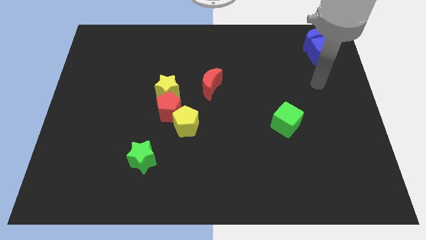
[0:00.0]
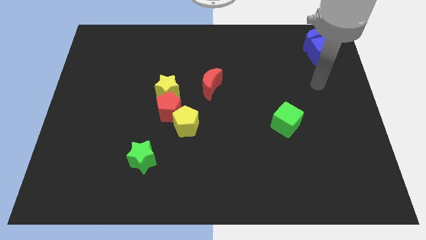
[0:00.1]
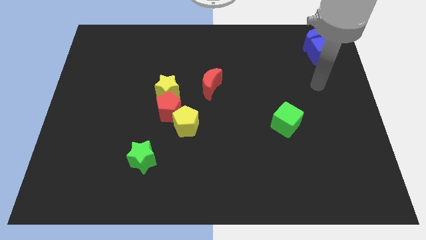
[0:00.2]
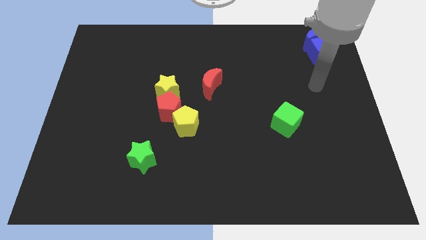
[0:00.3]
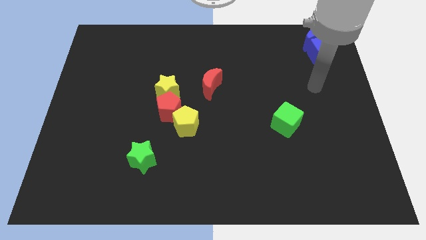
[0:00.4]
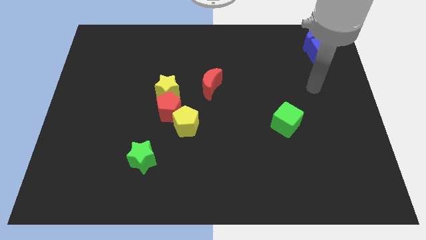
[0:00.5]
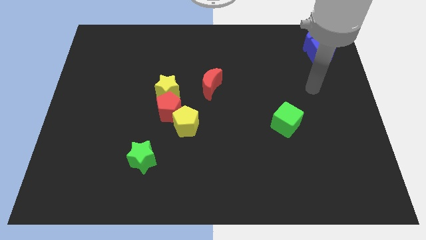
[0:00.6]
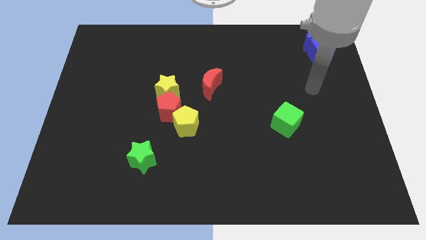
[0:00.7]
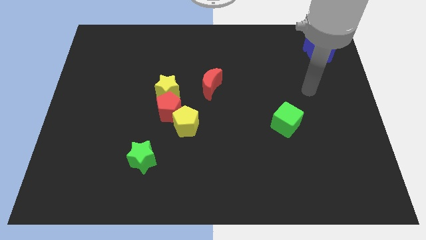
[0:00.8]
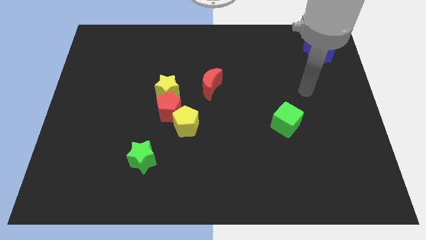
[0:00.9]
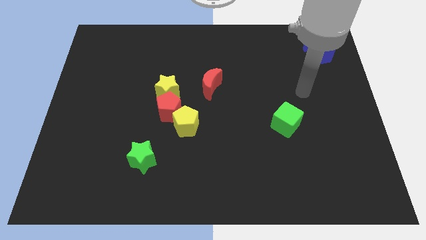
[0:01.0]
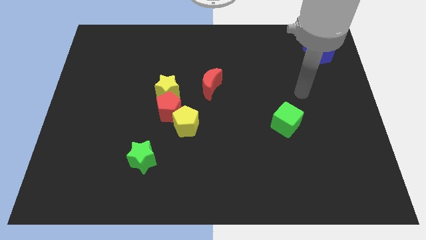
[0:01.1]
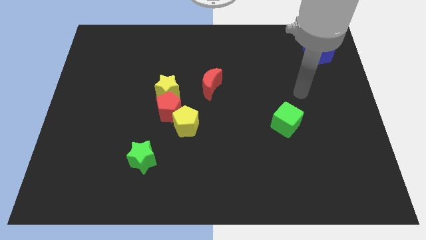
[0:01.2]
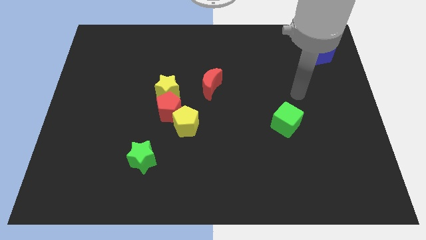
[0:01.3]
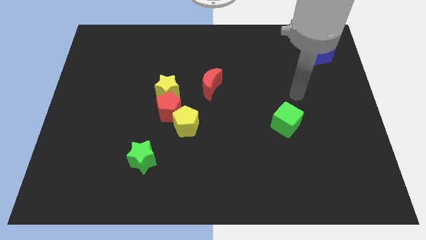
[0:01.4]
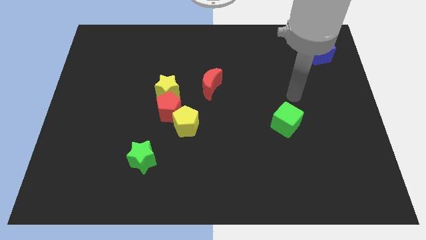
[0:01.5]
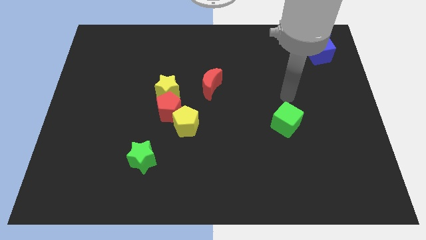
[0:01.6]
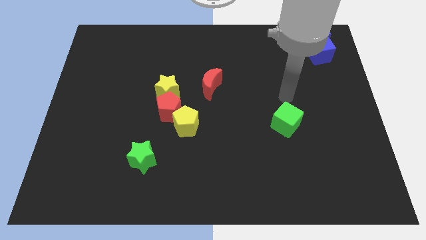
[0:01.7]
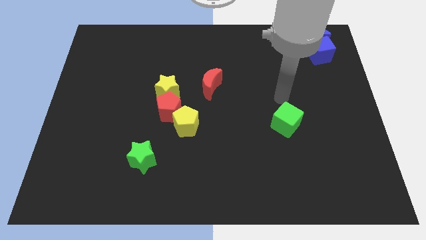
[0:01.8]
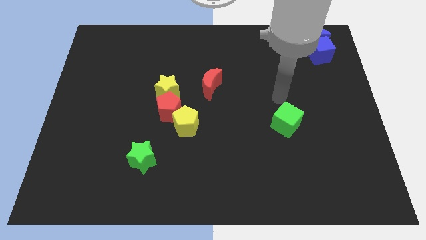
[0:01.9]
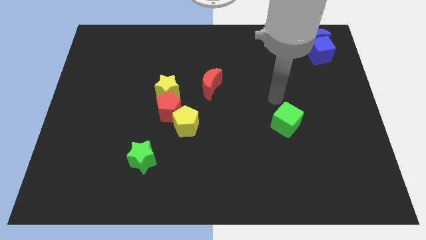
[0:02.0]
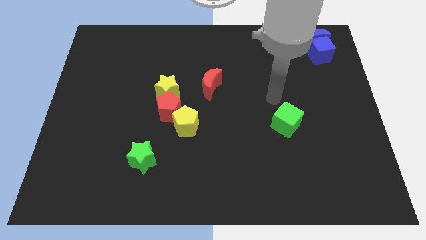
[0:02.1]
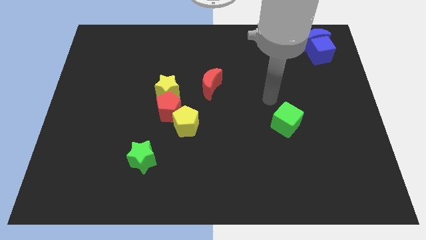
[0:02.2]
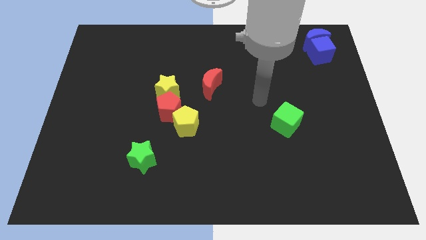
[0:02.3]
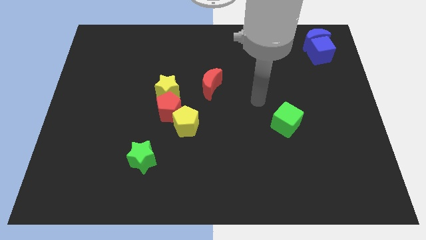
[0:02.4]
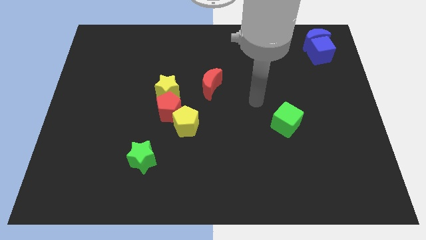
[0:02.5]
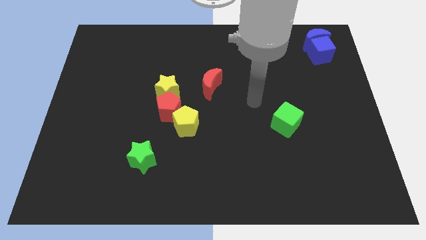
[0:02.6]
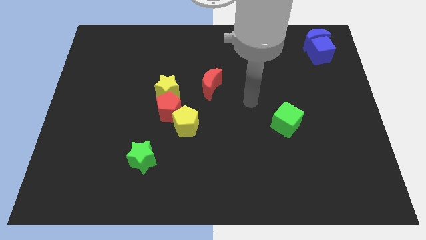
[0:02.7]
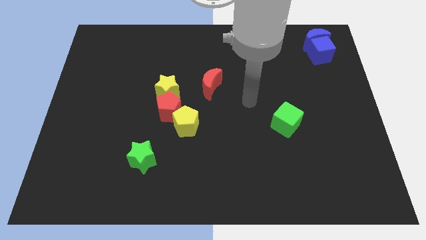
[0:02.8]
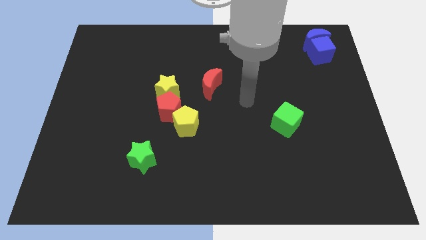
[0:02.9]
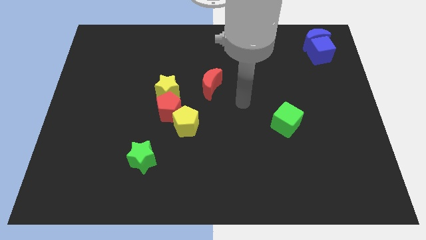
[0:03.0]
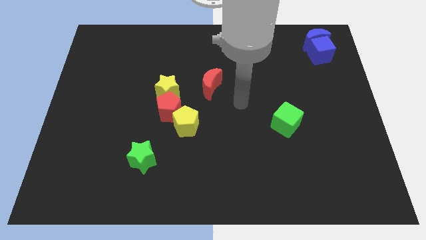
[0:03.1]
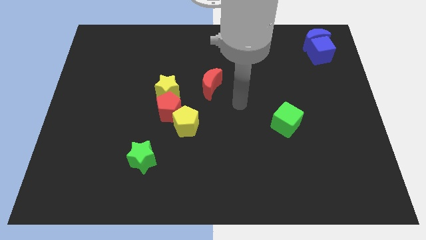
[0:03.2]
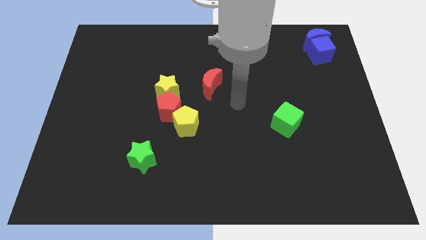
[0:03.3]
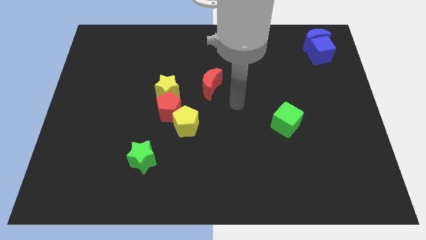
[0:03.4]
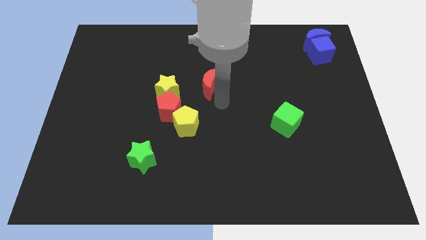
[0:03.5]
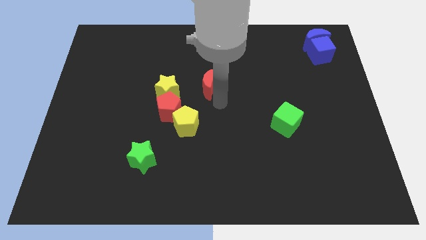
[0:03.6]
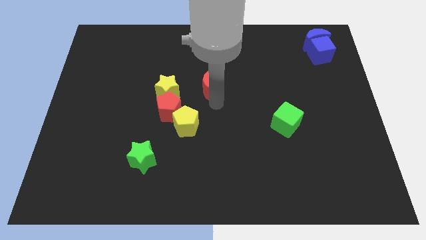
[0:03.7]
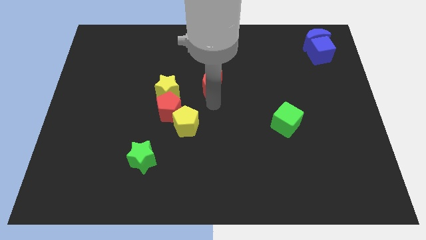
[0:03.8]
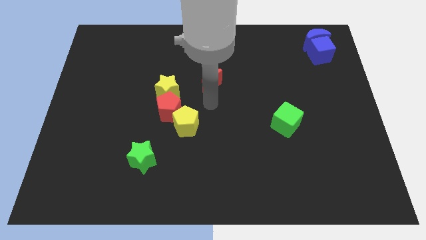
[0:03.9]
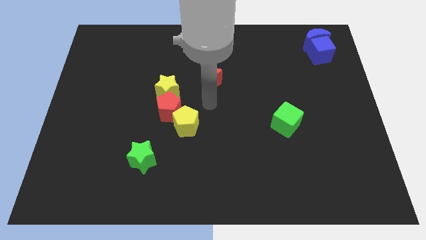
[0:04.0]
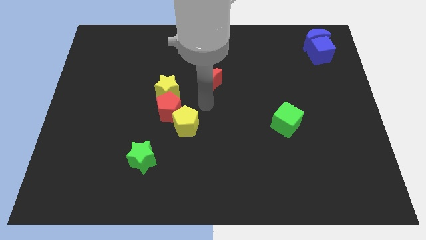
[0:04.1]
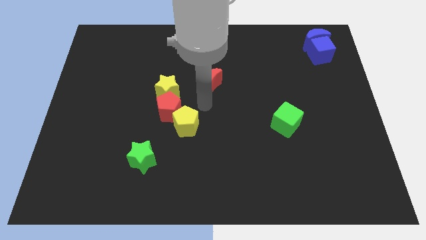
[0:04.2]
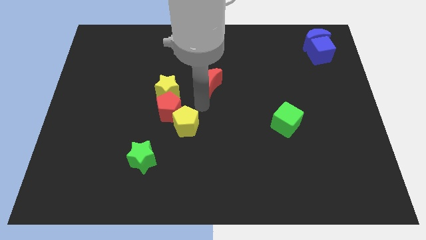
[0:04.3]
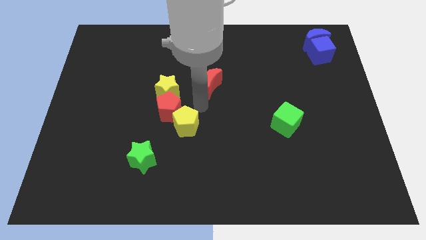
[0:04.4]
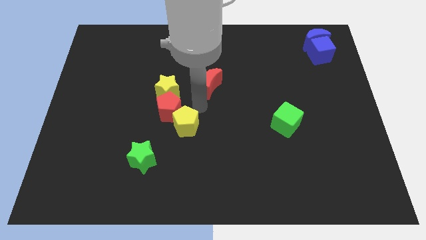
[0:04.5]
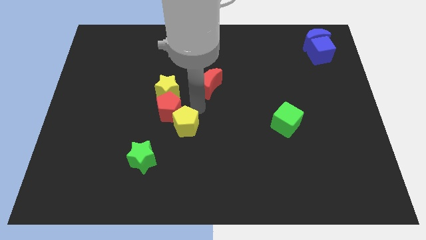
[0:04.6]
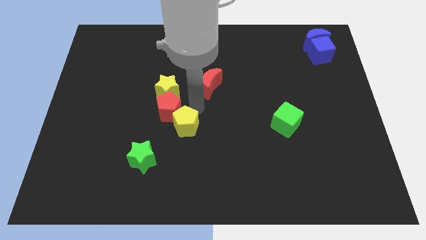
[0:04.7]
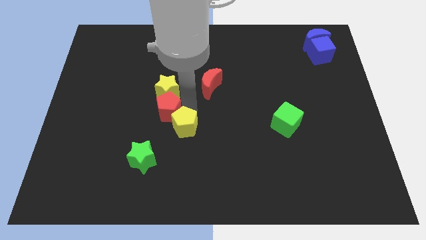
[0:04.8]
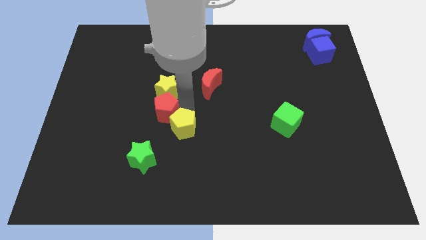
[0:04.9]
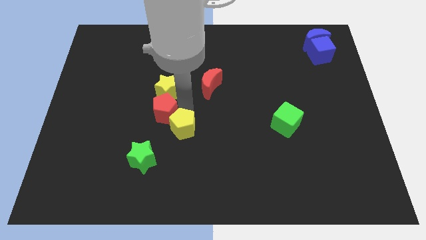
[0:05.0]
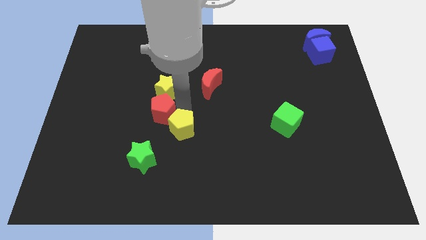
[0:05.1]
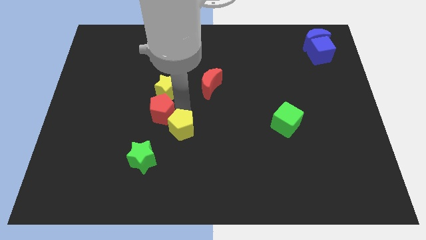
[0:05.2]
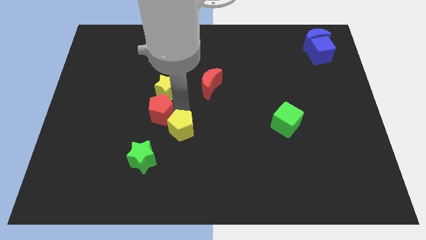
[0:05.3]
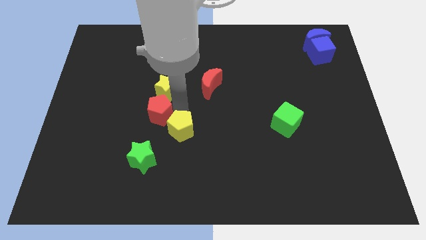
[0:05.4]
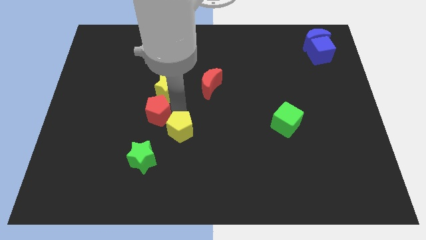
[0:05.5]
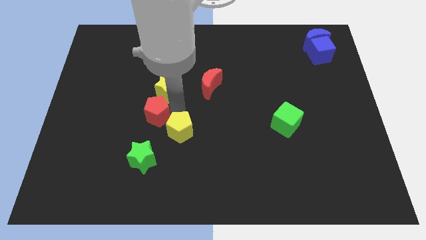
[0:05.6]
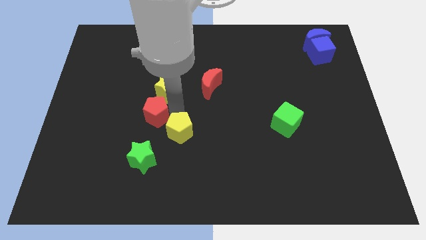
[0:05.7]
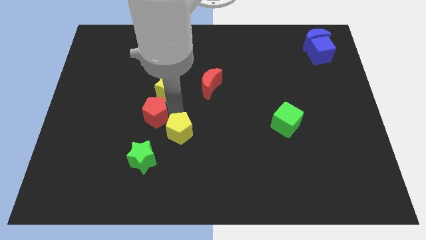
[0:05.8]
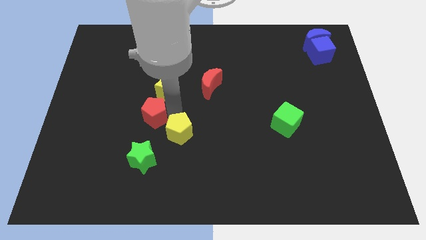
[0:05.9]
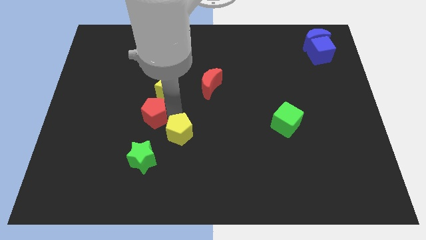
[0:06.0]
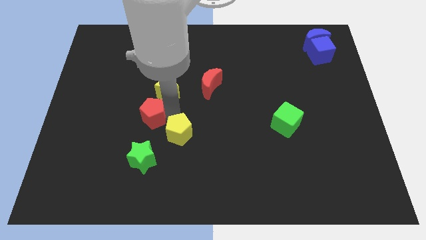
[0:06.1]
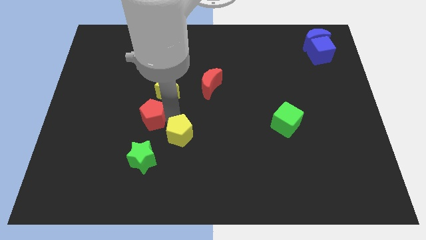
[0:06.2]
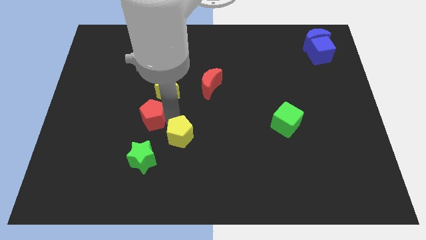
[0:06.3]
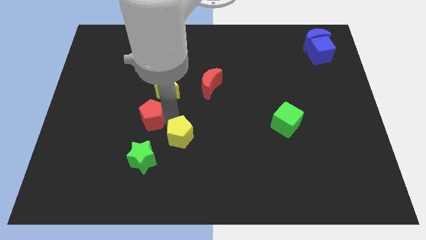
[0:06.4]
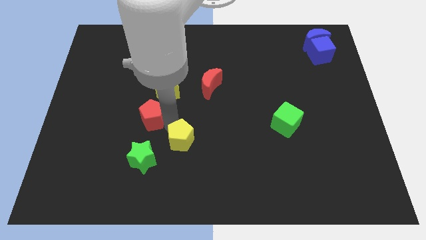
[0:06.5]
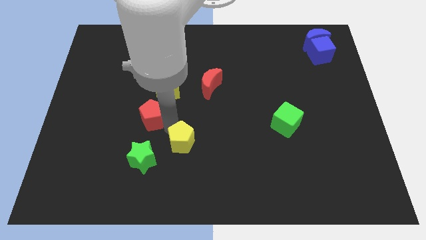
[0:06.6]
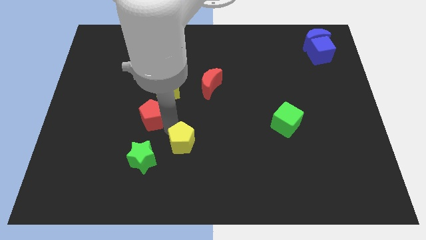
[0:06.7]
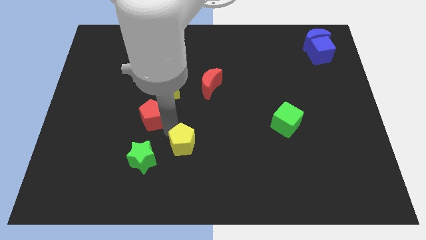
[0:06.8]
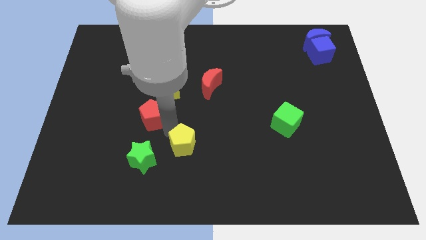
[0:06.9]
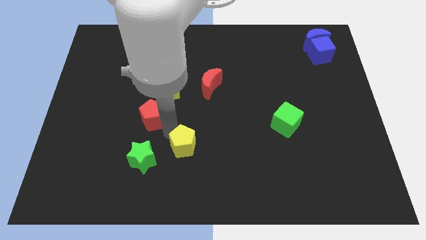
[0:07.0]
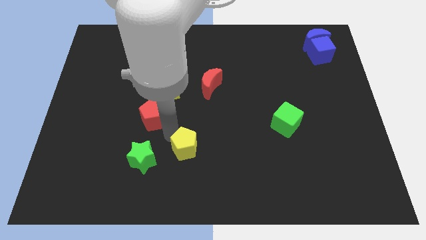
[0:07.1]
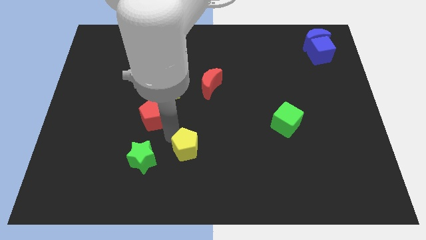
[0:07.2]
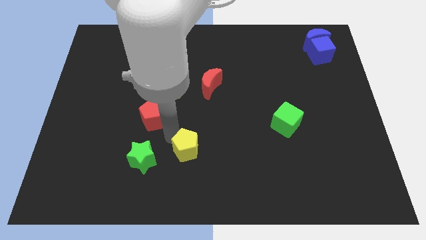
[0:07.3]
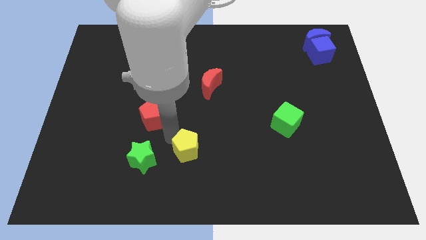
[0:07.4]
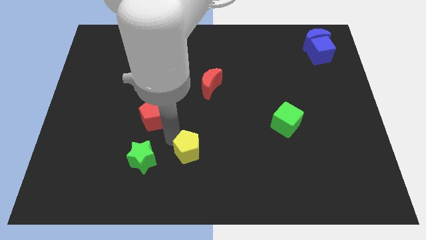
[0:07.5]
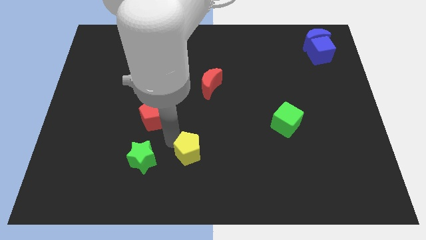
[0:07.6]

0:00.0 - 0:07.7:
separate the yellow pentagon from the red pentagon

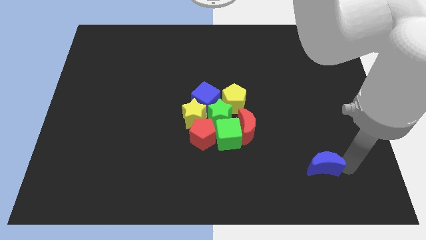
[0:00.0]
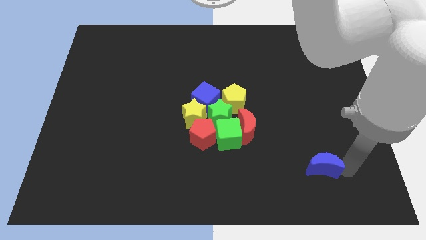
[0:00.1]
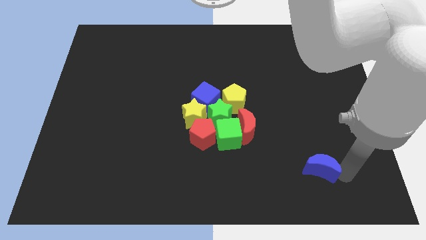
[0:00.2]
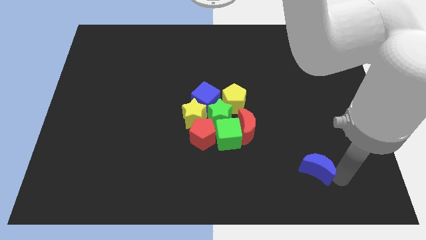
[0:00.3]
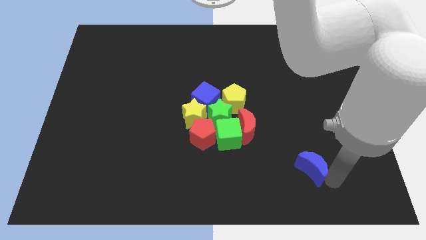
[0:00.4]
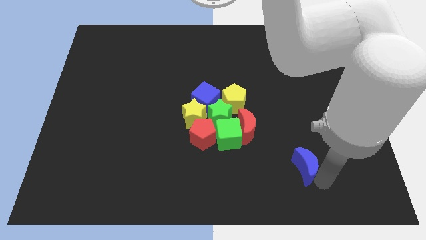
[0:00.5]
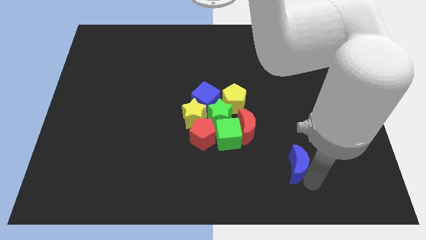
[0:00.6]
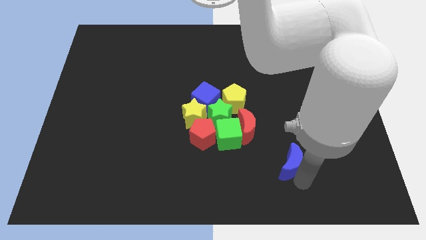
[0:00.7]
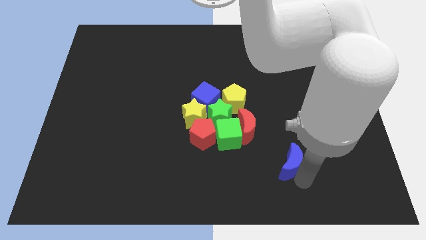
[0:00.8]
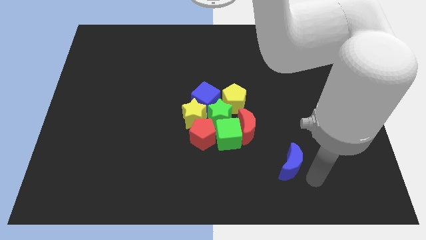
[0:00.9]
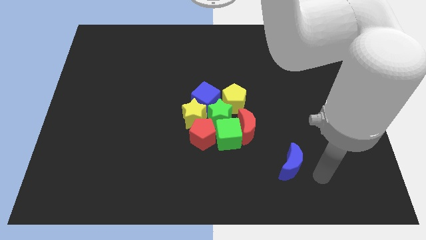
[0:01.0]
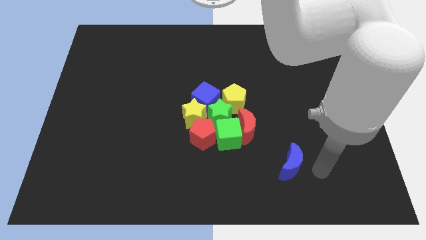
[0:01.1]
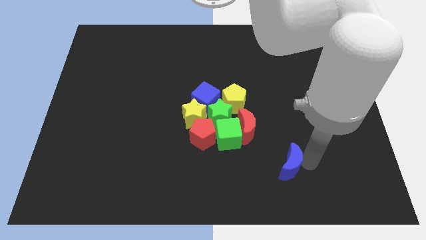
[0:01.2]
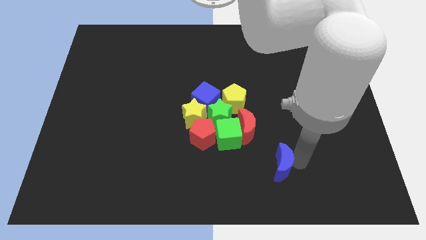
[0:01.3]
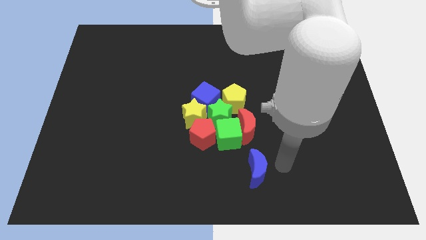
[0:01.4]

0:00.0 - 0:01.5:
move blue moon to the left below the red moon
